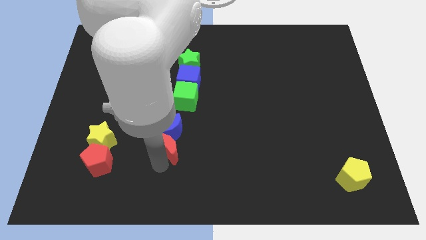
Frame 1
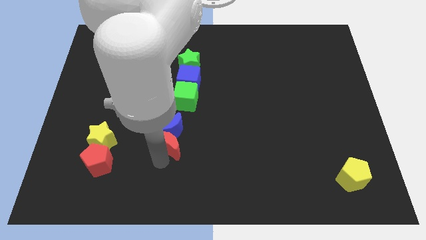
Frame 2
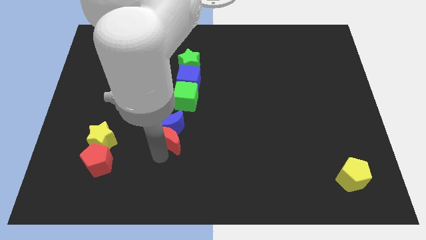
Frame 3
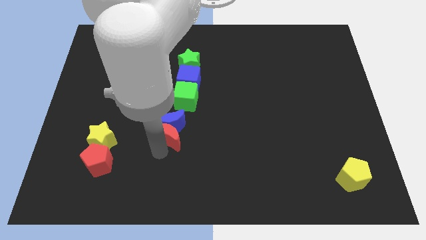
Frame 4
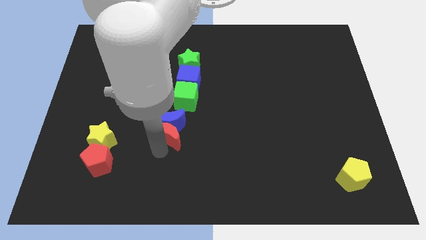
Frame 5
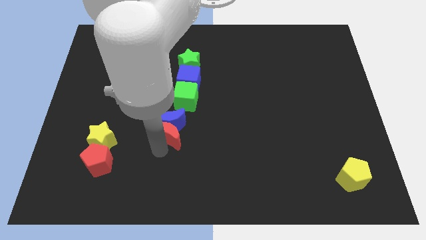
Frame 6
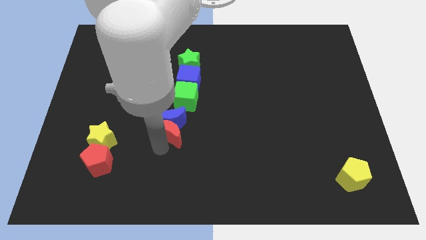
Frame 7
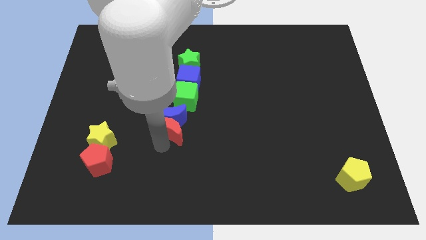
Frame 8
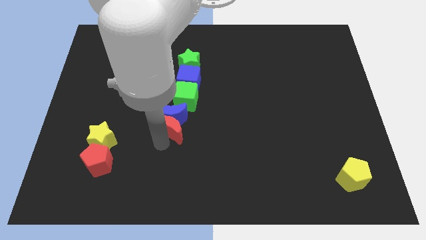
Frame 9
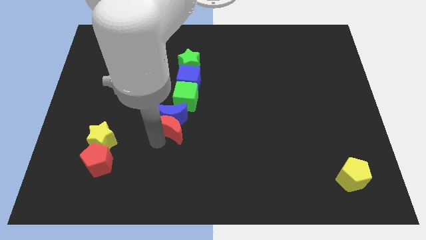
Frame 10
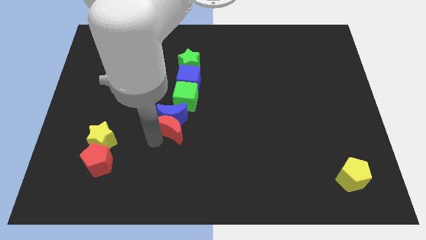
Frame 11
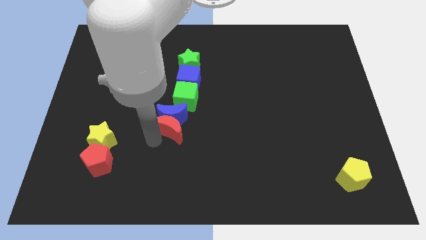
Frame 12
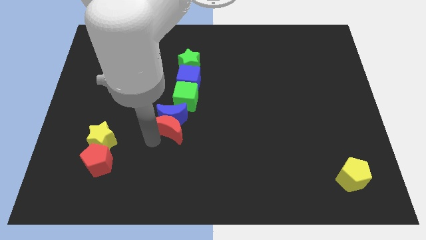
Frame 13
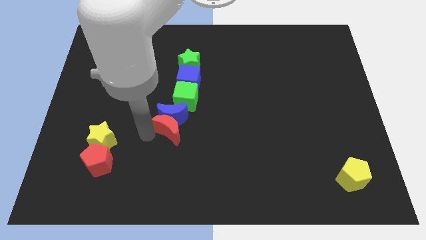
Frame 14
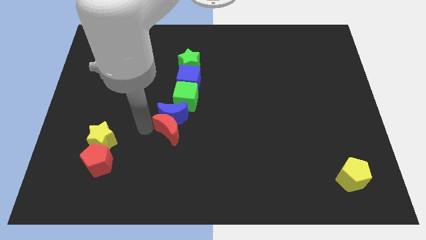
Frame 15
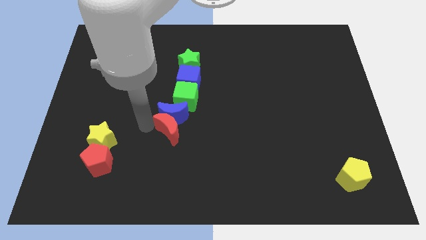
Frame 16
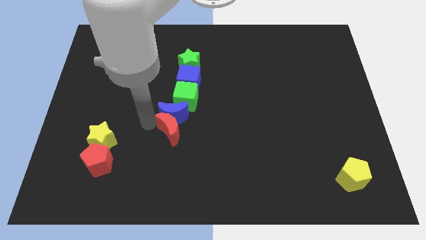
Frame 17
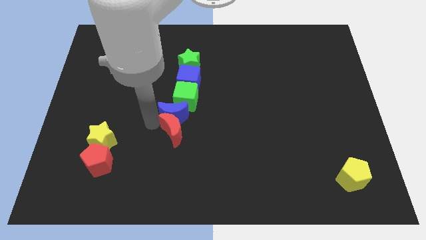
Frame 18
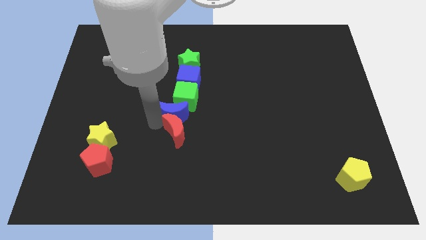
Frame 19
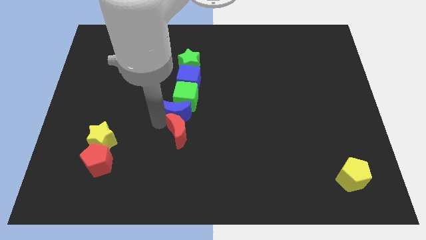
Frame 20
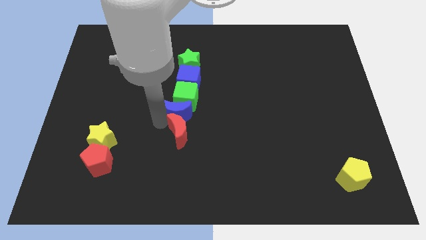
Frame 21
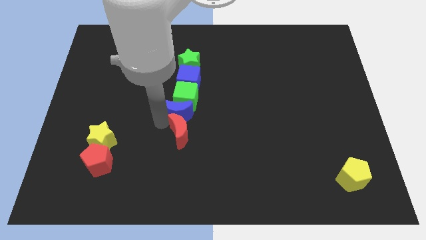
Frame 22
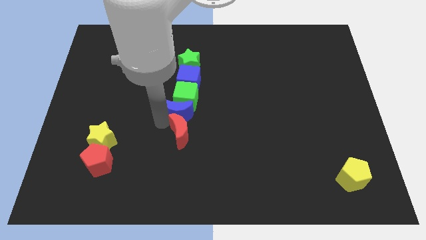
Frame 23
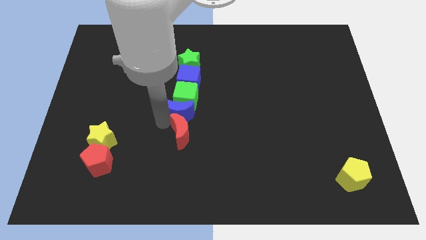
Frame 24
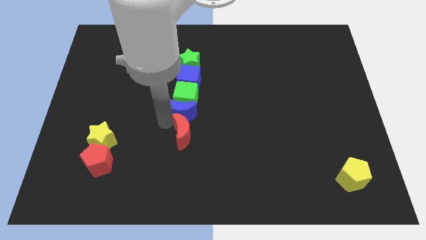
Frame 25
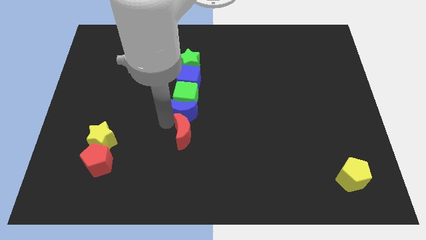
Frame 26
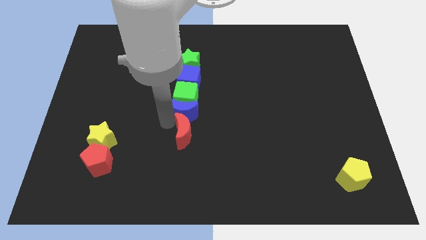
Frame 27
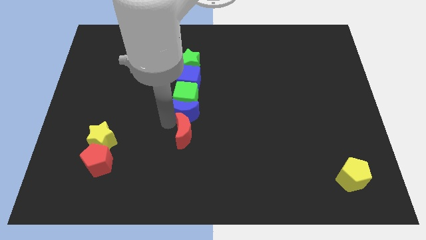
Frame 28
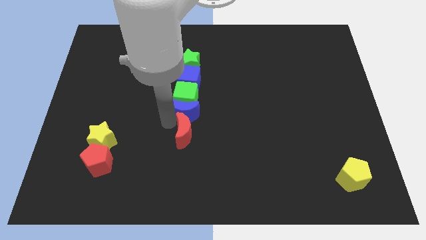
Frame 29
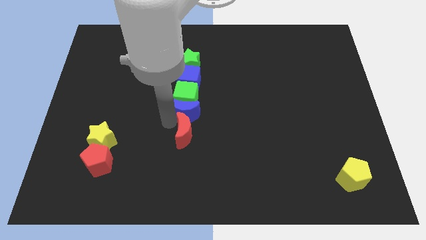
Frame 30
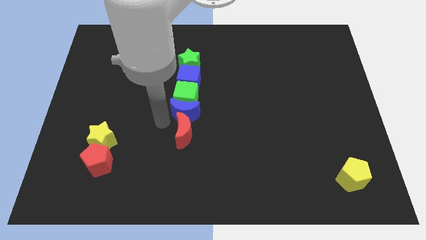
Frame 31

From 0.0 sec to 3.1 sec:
push the blue crescent with the red crescent below to the green cube

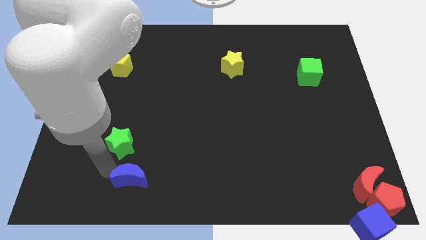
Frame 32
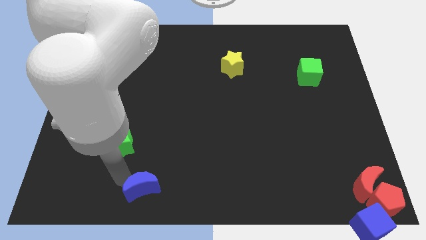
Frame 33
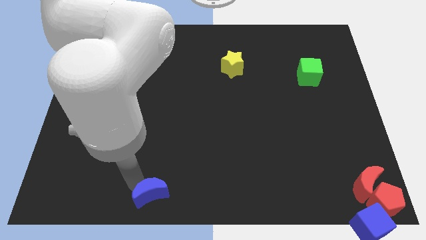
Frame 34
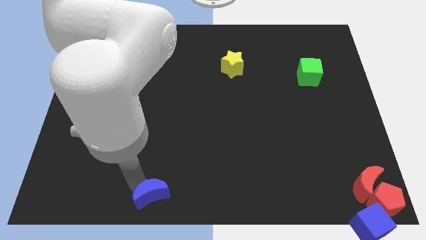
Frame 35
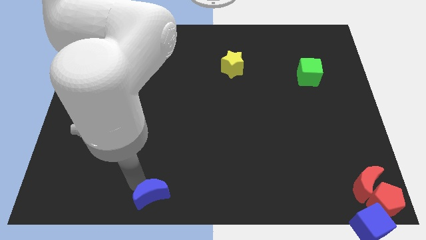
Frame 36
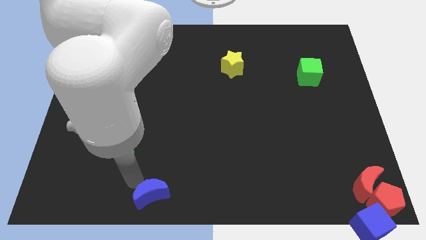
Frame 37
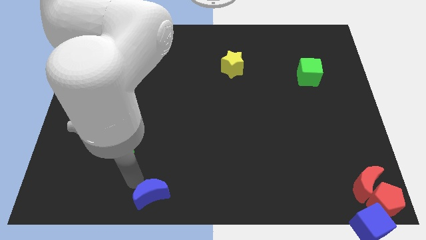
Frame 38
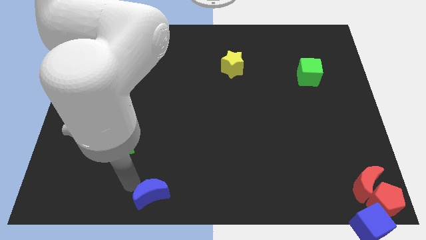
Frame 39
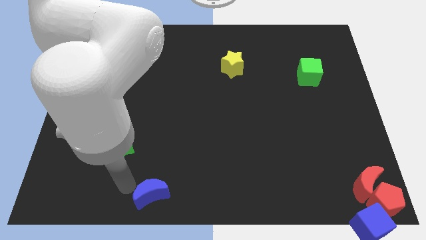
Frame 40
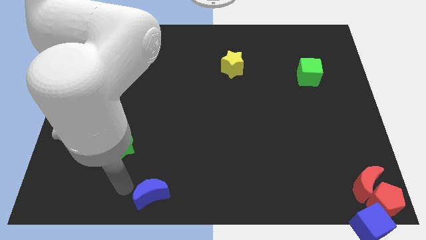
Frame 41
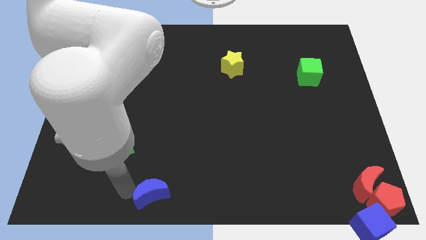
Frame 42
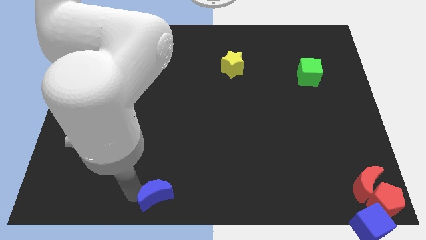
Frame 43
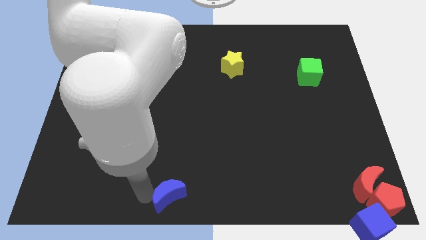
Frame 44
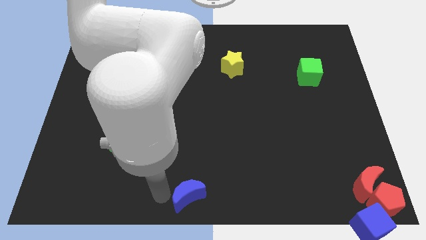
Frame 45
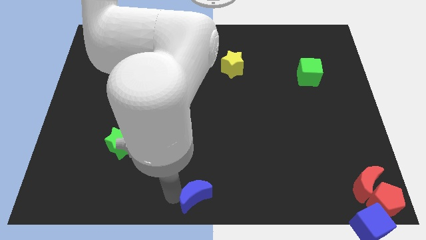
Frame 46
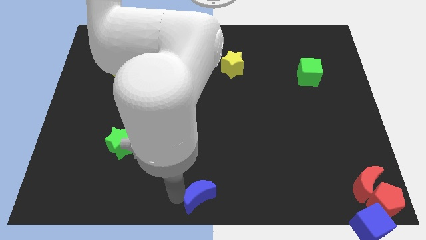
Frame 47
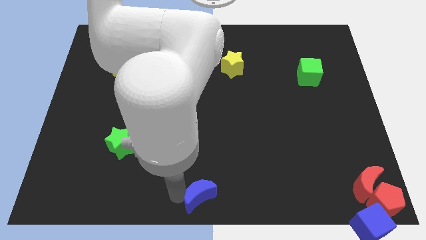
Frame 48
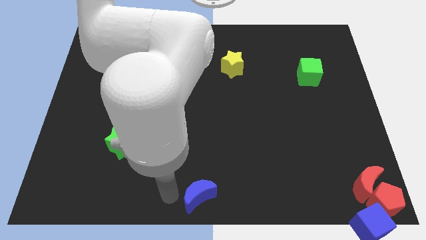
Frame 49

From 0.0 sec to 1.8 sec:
move the blue moon towards the bottom center

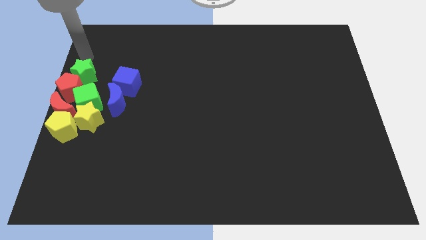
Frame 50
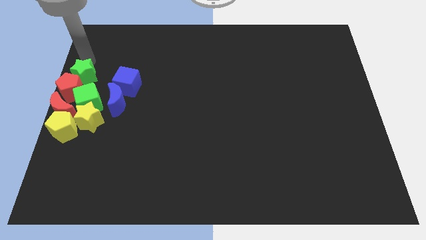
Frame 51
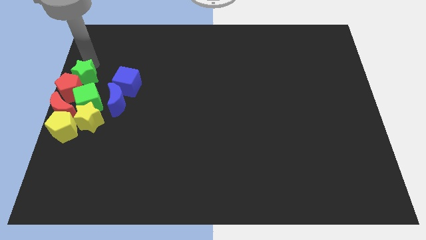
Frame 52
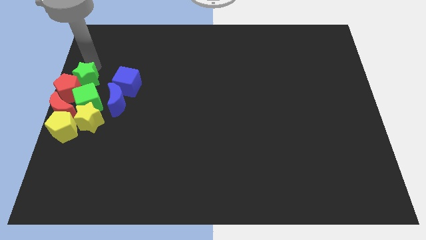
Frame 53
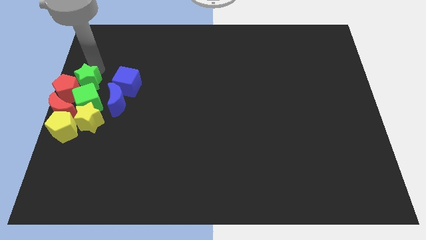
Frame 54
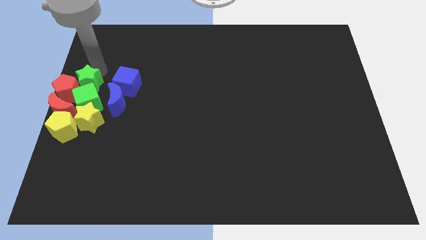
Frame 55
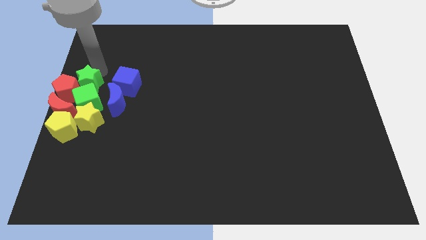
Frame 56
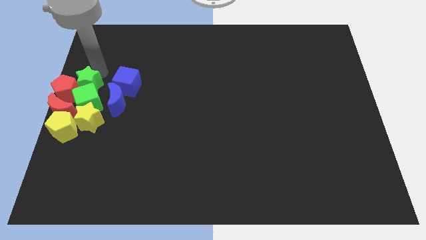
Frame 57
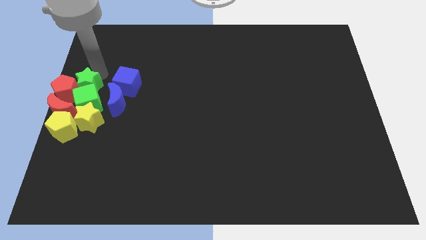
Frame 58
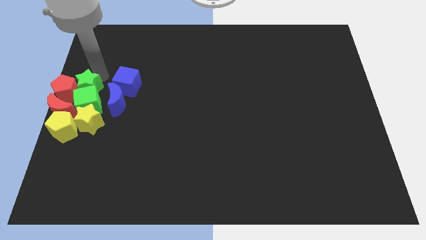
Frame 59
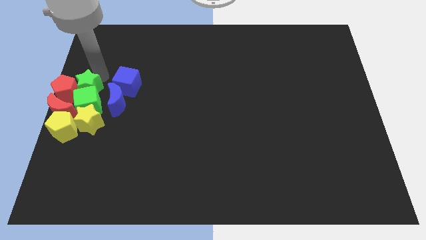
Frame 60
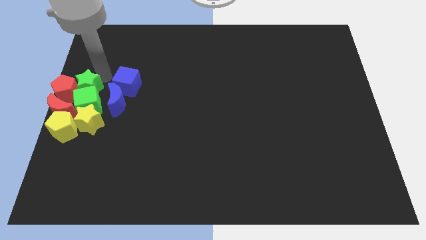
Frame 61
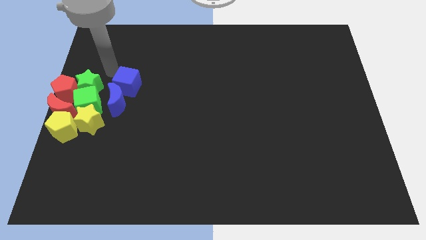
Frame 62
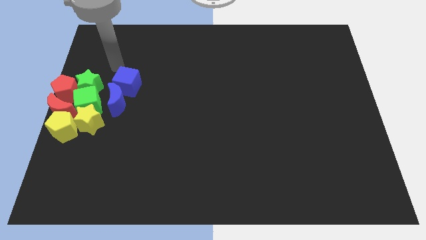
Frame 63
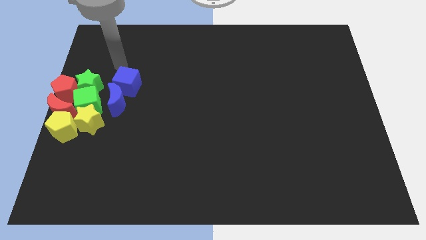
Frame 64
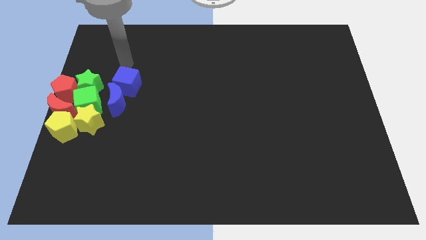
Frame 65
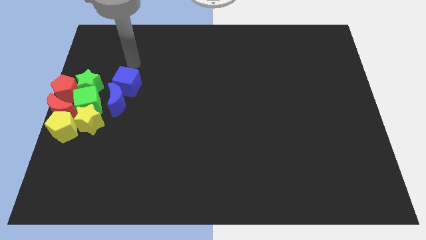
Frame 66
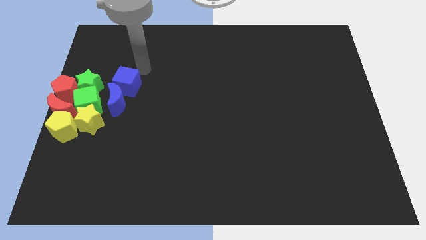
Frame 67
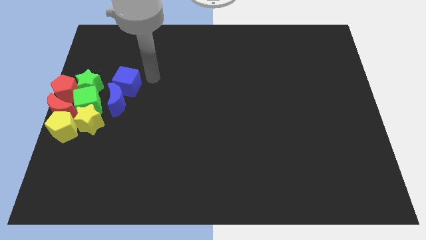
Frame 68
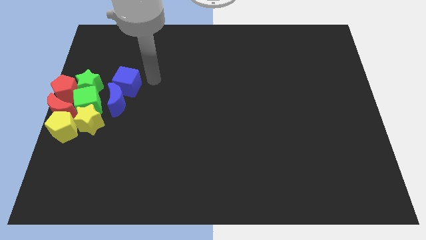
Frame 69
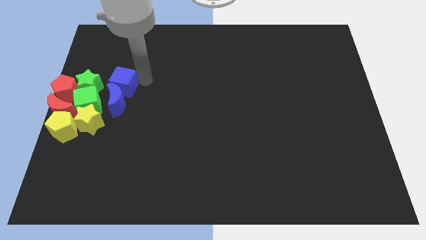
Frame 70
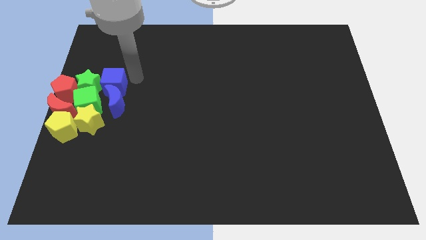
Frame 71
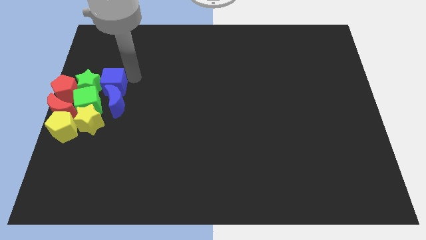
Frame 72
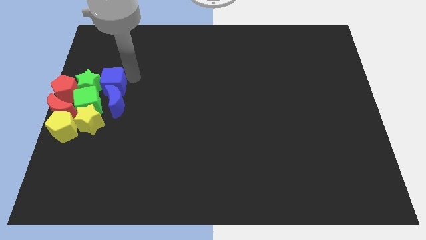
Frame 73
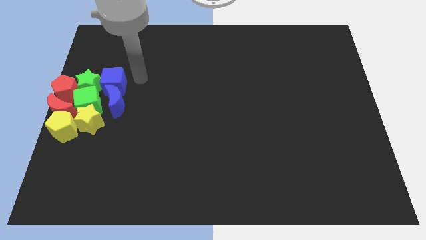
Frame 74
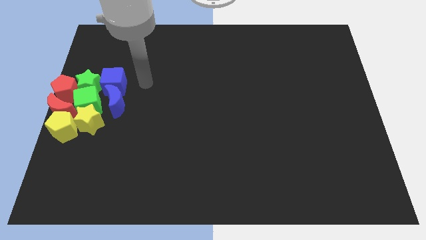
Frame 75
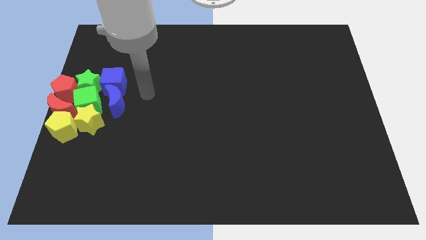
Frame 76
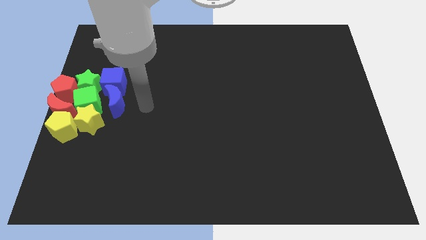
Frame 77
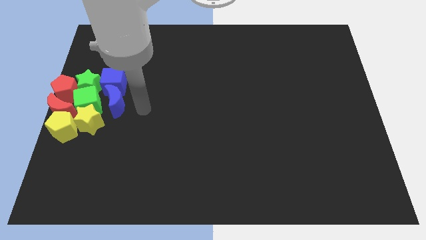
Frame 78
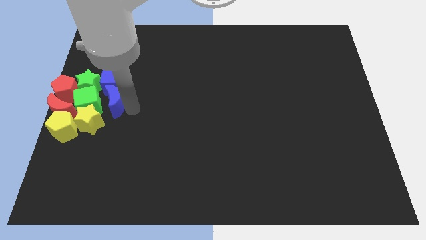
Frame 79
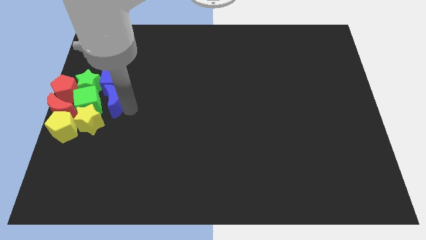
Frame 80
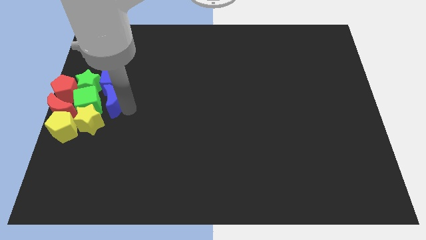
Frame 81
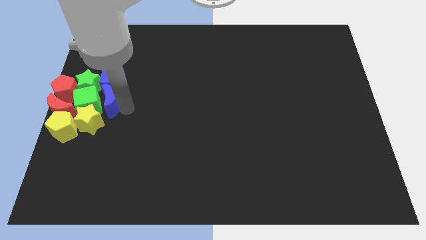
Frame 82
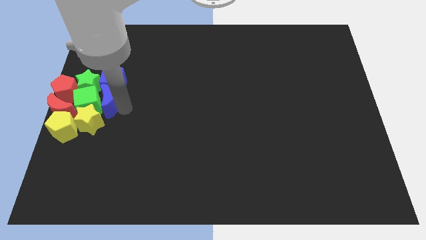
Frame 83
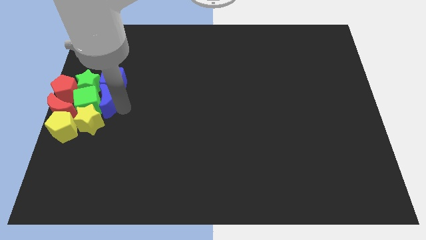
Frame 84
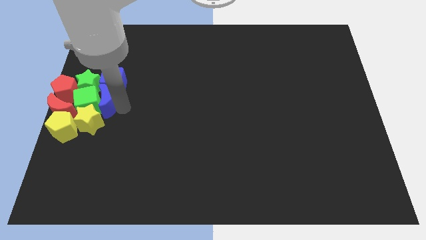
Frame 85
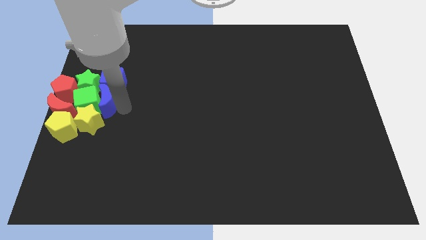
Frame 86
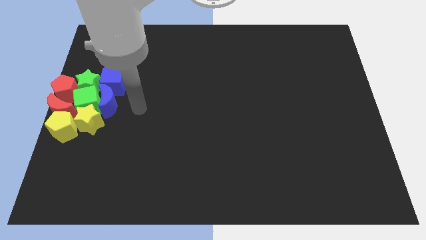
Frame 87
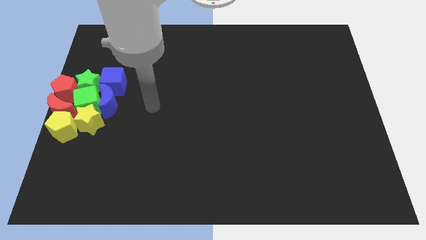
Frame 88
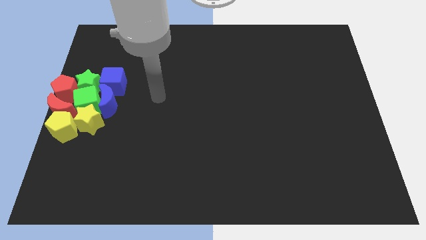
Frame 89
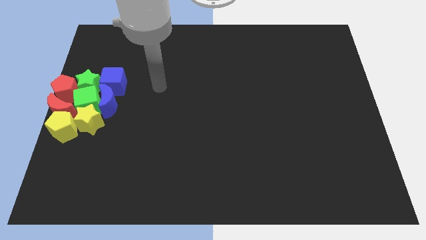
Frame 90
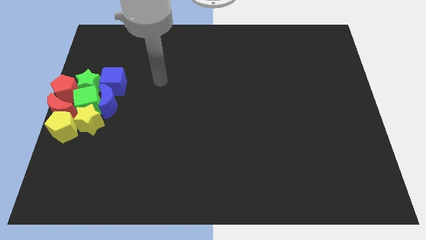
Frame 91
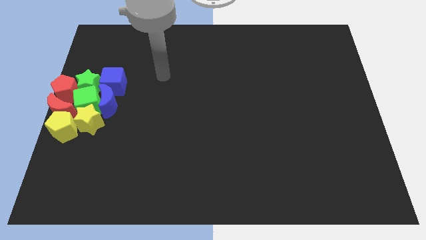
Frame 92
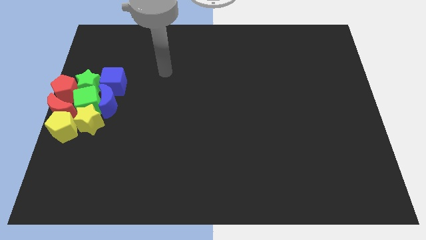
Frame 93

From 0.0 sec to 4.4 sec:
push green star into the green cube
